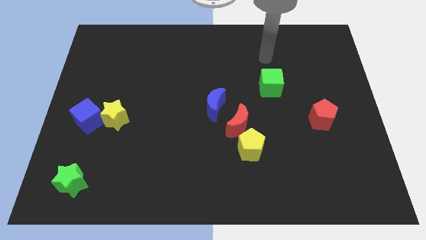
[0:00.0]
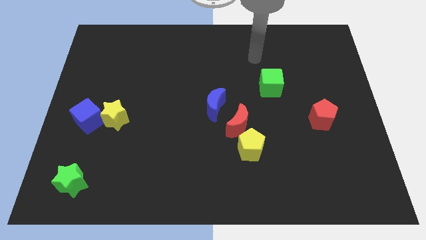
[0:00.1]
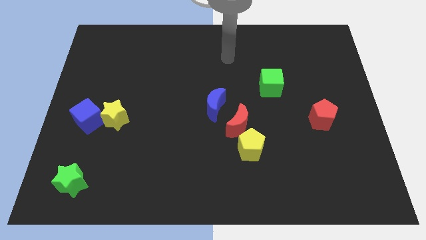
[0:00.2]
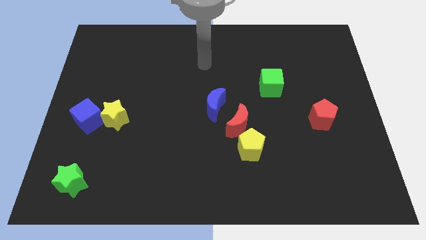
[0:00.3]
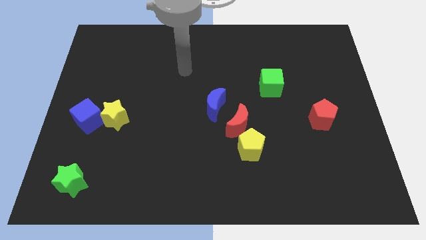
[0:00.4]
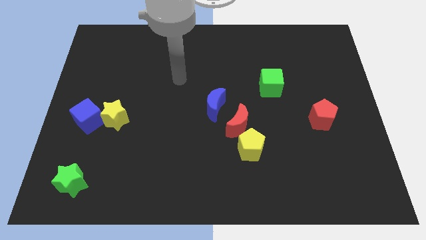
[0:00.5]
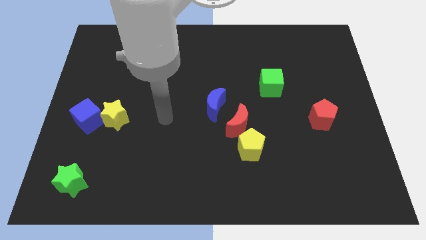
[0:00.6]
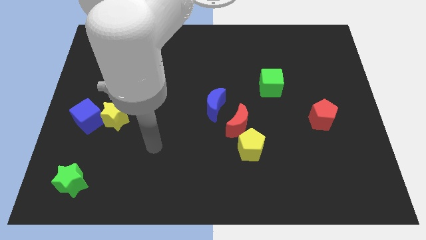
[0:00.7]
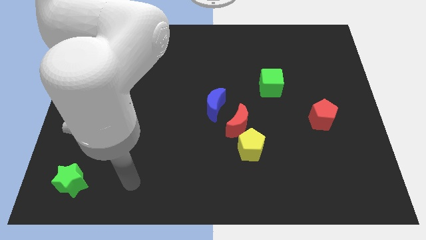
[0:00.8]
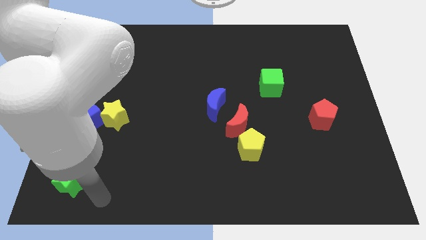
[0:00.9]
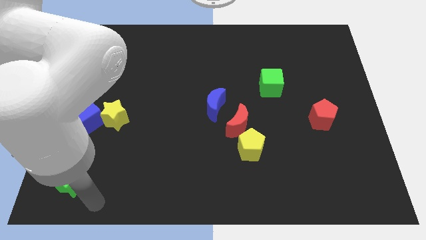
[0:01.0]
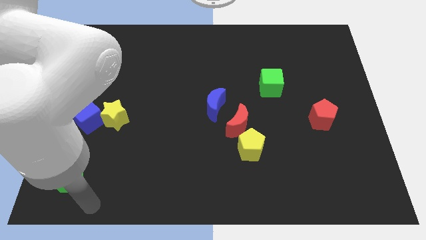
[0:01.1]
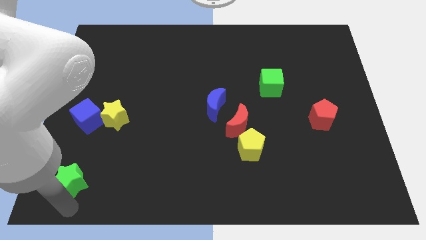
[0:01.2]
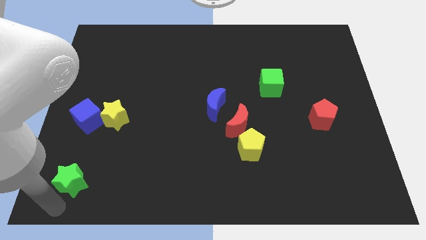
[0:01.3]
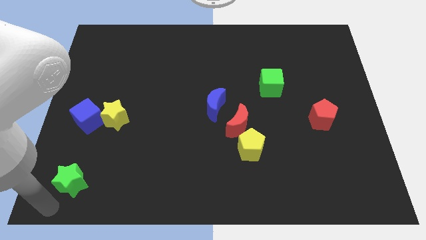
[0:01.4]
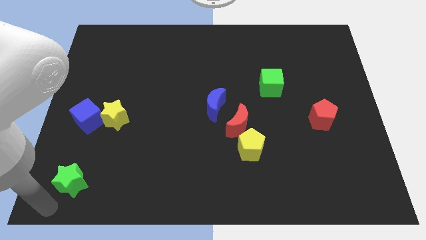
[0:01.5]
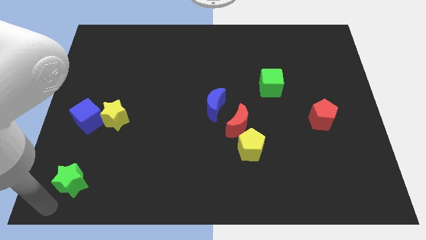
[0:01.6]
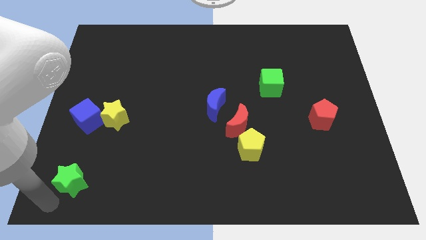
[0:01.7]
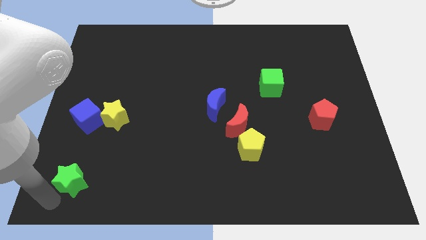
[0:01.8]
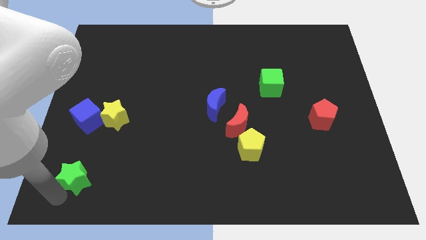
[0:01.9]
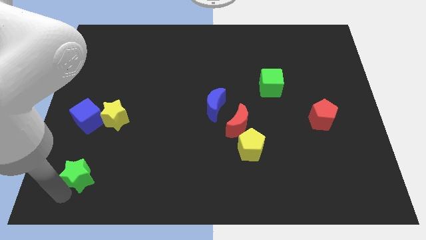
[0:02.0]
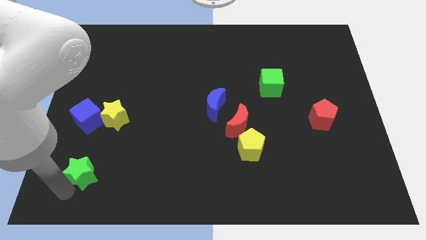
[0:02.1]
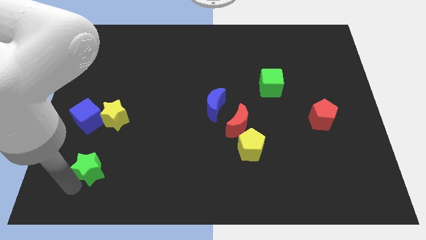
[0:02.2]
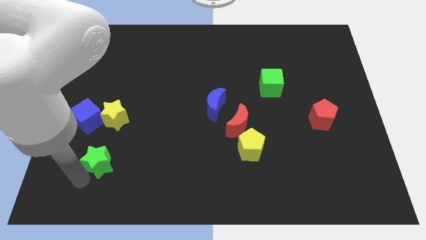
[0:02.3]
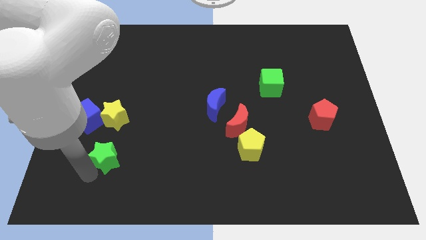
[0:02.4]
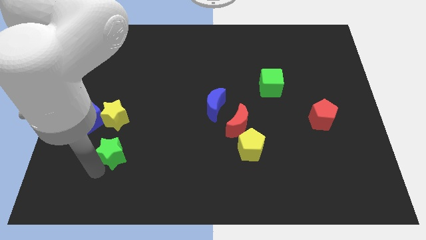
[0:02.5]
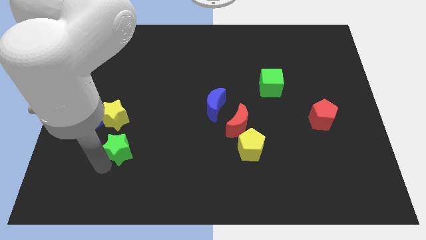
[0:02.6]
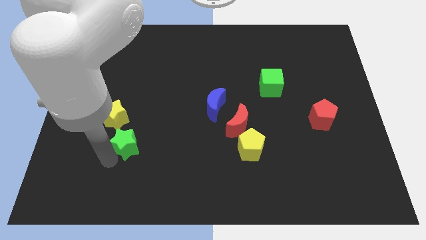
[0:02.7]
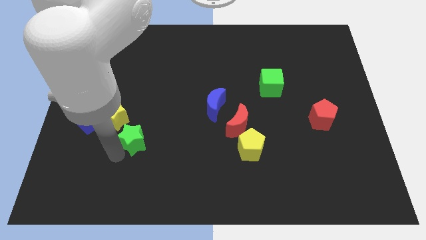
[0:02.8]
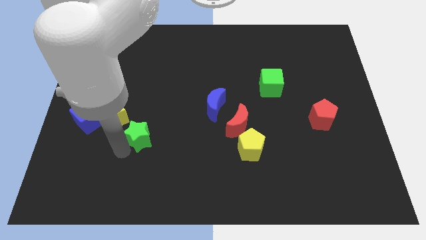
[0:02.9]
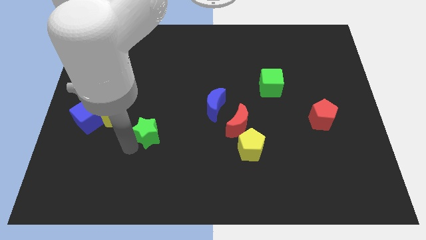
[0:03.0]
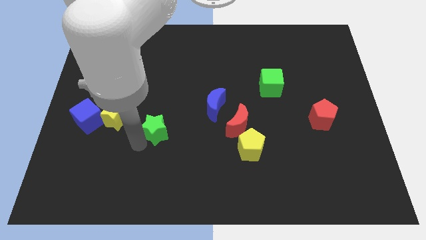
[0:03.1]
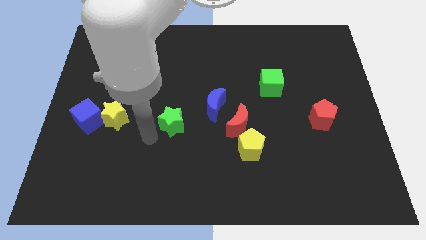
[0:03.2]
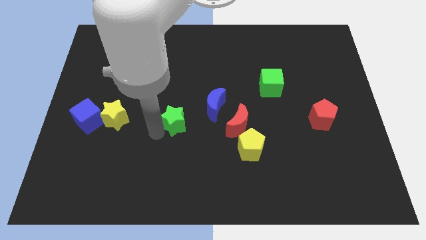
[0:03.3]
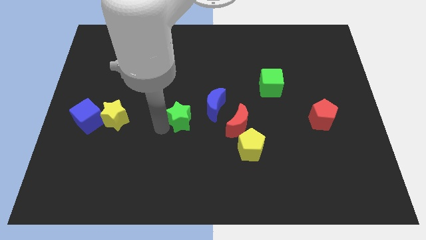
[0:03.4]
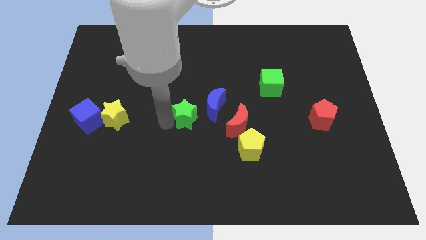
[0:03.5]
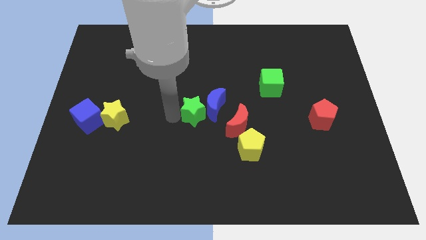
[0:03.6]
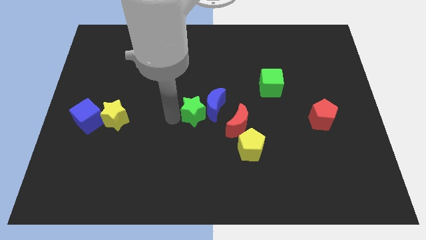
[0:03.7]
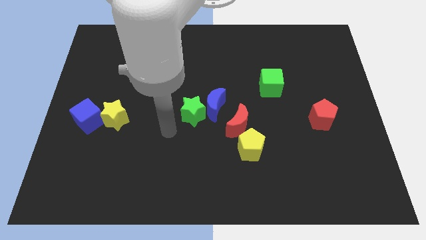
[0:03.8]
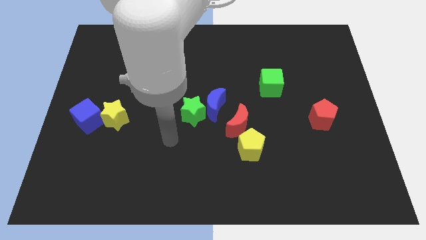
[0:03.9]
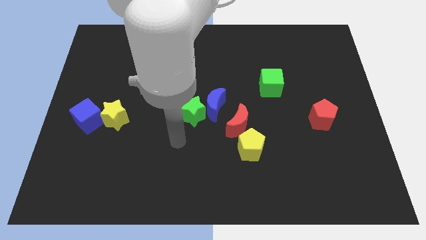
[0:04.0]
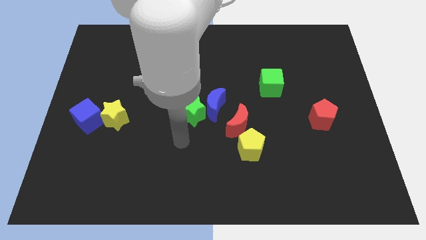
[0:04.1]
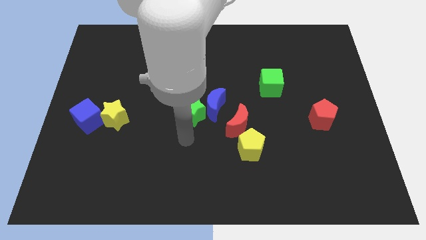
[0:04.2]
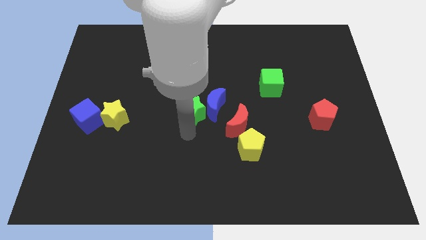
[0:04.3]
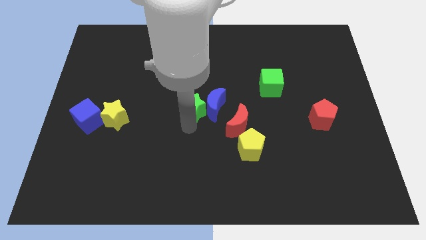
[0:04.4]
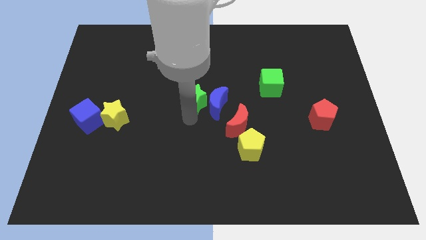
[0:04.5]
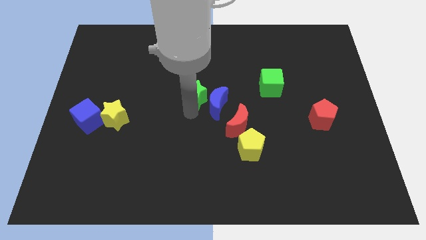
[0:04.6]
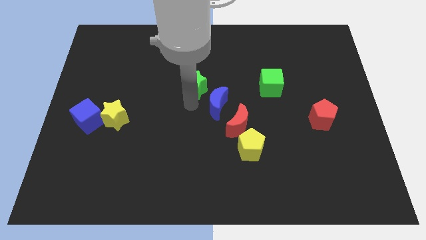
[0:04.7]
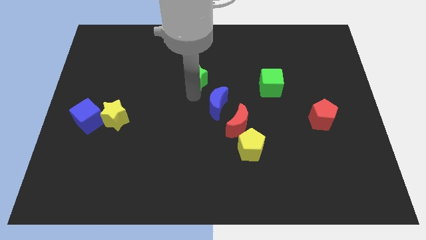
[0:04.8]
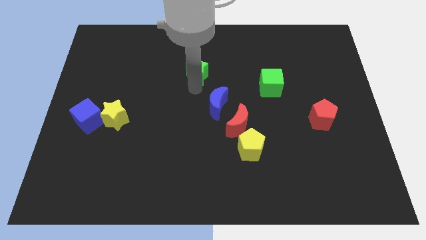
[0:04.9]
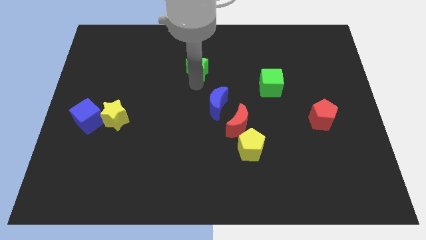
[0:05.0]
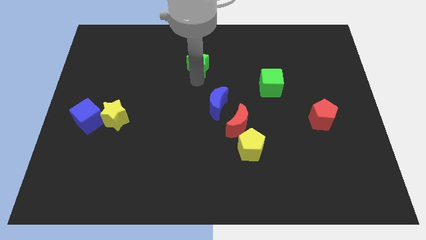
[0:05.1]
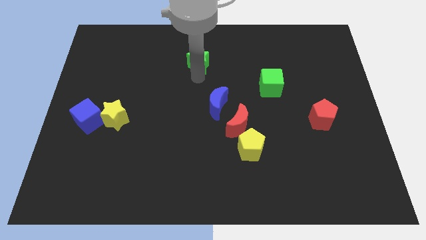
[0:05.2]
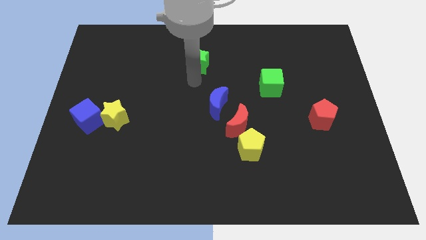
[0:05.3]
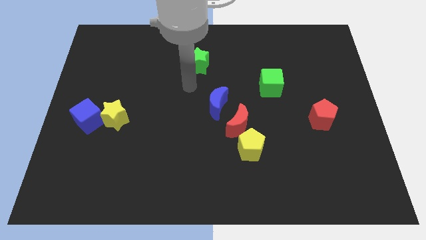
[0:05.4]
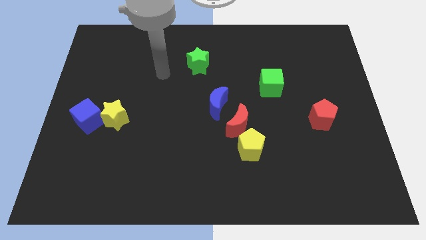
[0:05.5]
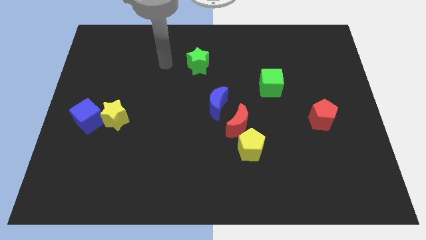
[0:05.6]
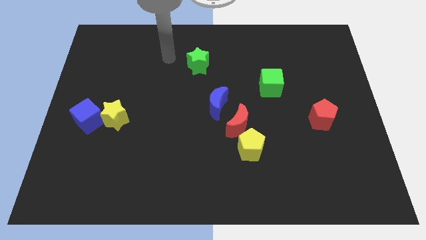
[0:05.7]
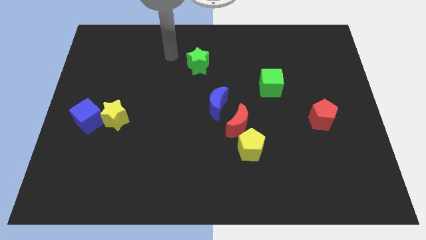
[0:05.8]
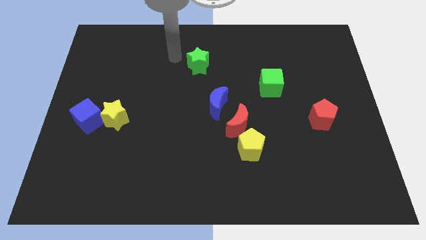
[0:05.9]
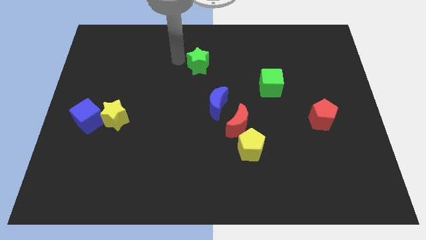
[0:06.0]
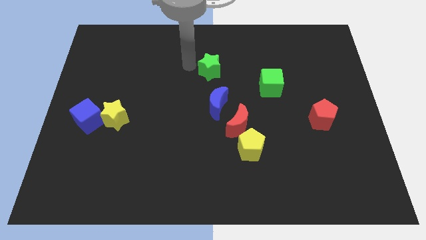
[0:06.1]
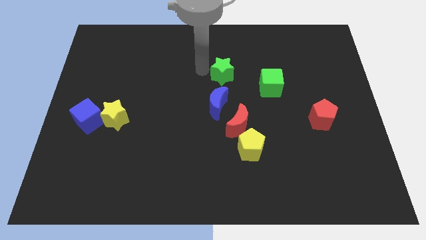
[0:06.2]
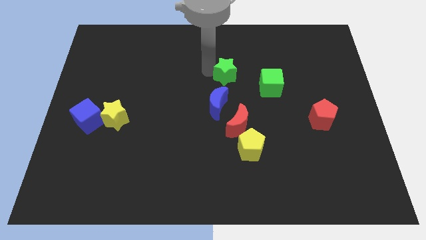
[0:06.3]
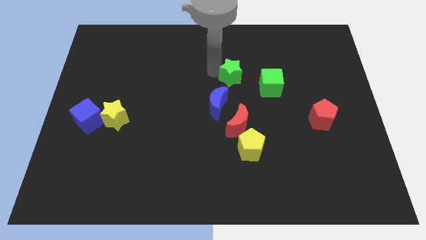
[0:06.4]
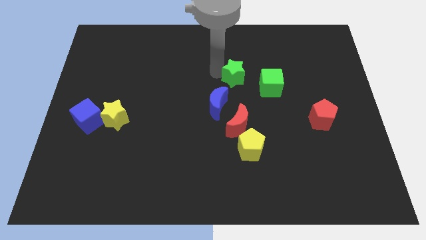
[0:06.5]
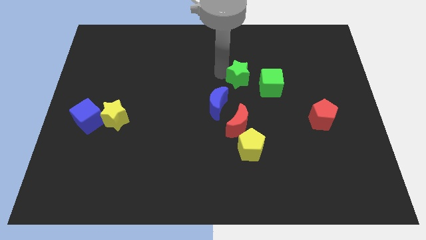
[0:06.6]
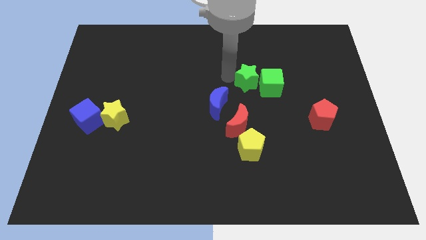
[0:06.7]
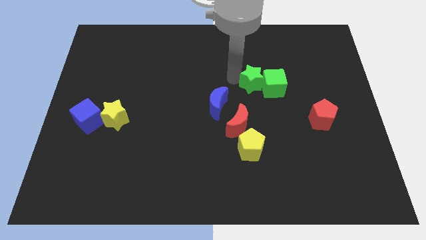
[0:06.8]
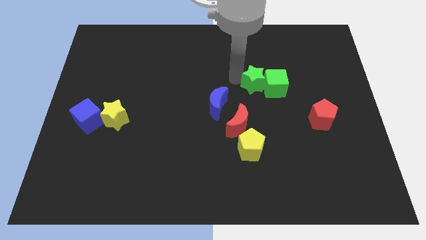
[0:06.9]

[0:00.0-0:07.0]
push the green star close to the green cube

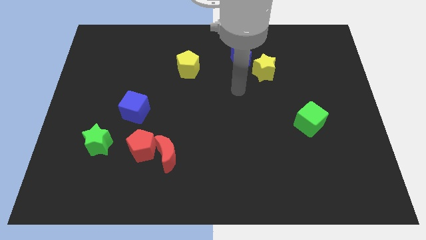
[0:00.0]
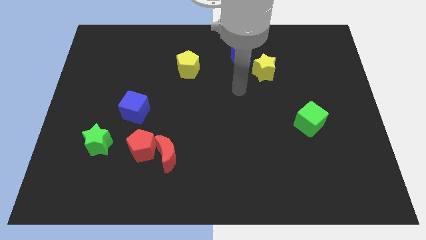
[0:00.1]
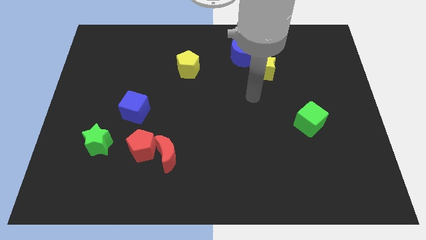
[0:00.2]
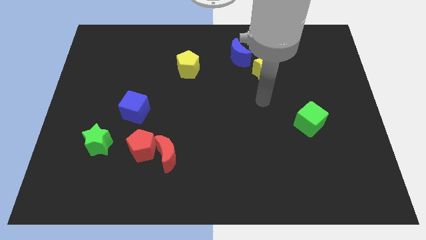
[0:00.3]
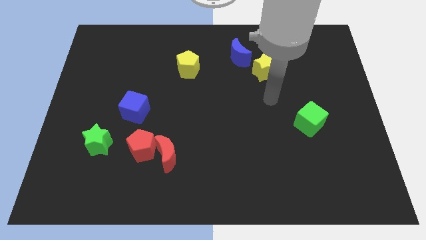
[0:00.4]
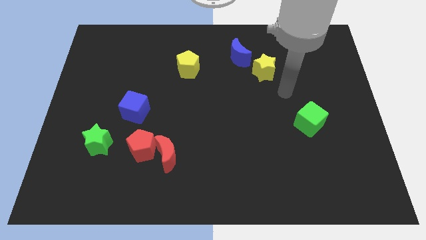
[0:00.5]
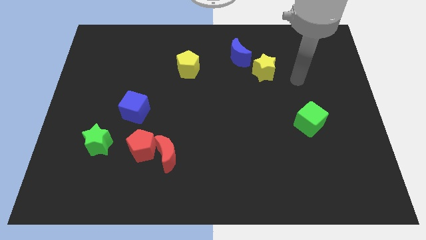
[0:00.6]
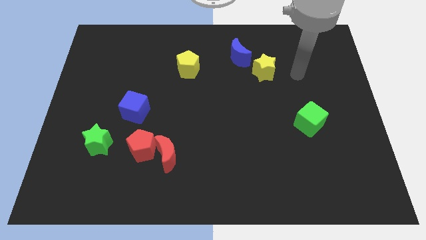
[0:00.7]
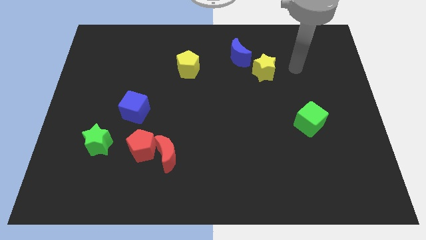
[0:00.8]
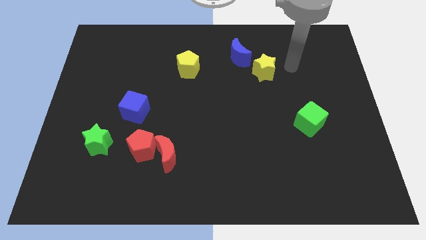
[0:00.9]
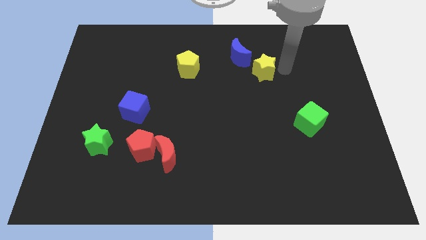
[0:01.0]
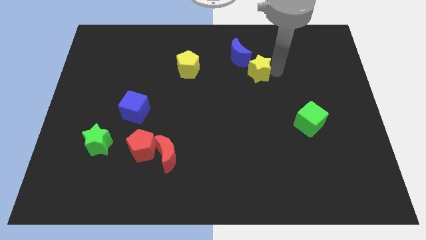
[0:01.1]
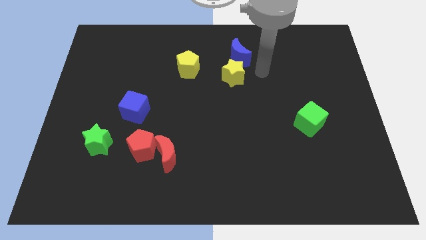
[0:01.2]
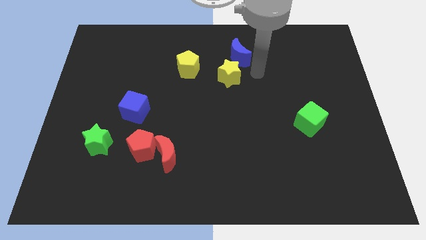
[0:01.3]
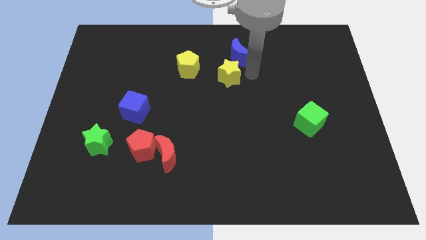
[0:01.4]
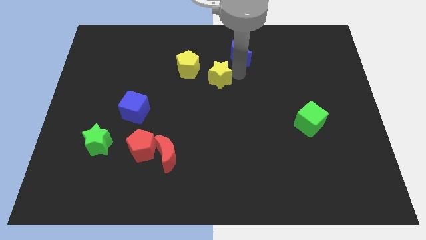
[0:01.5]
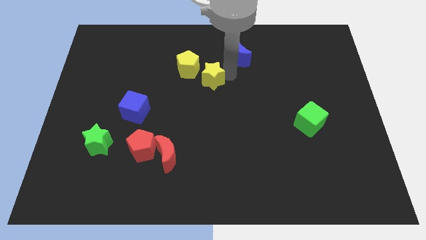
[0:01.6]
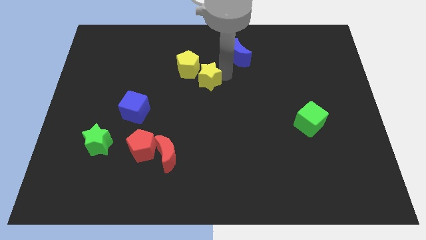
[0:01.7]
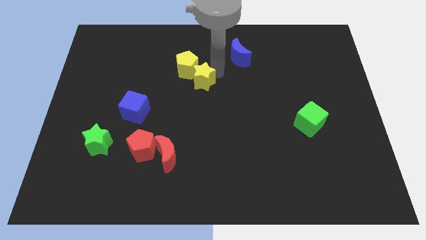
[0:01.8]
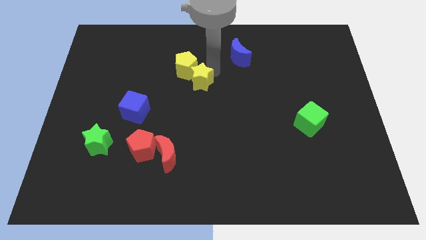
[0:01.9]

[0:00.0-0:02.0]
slide the yellow star close to the yellow pentagon
